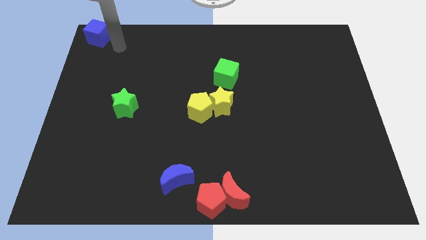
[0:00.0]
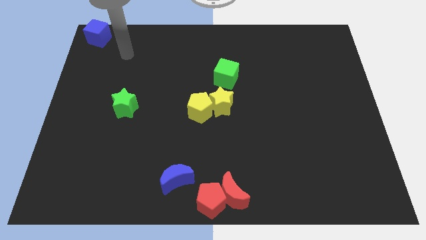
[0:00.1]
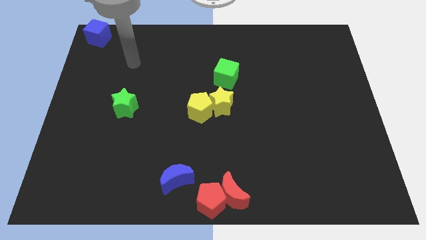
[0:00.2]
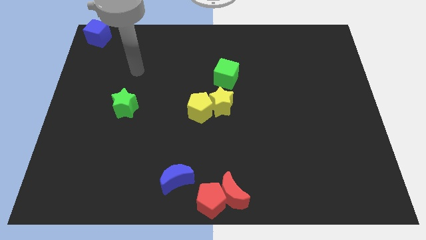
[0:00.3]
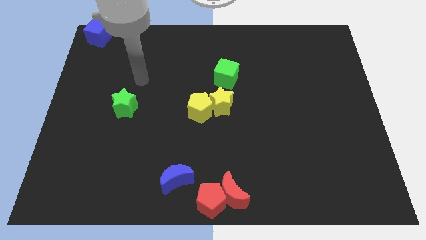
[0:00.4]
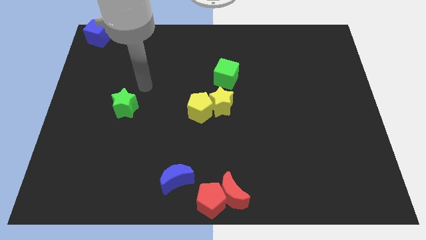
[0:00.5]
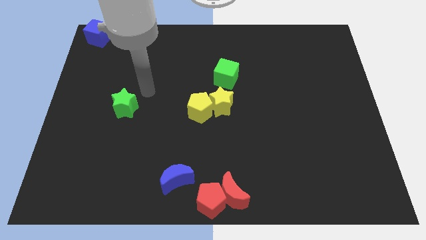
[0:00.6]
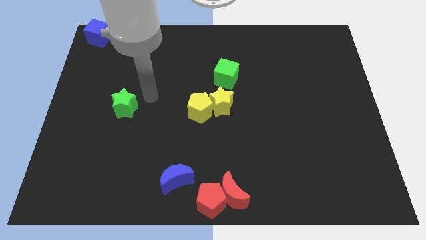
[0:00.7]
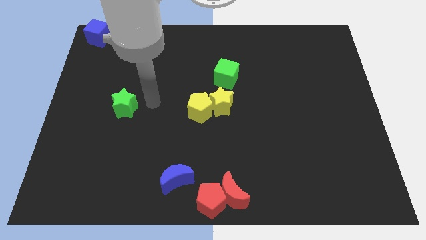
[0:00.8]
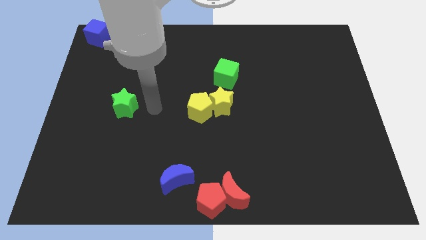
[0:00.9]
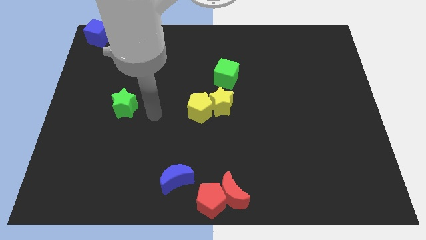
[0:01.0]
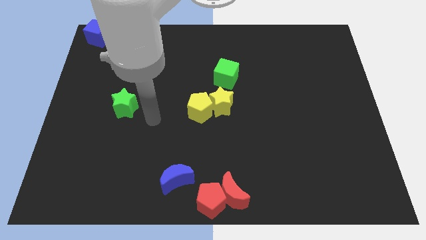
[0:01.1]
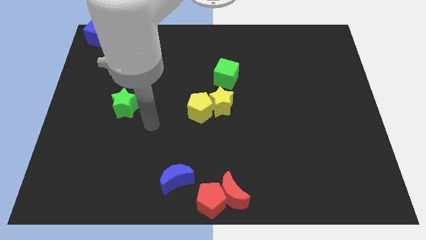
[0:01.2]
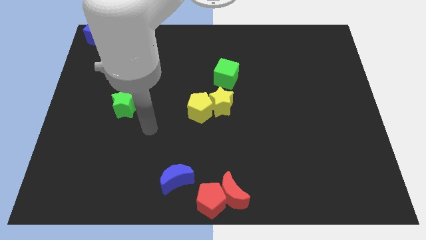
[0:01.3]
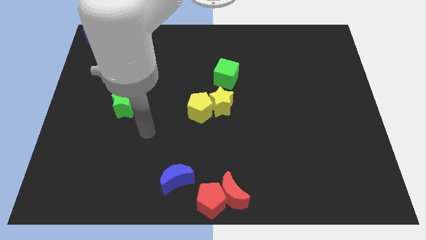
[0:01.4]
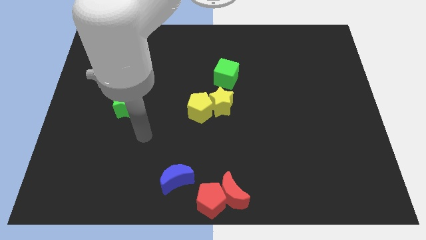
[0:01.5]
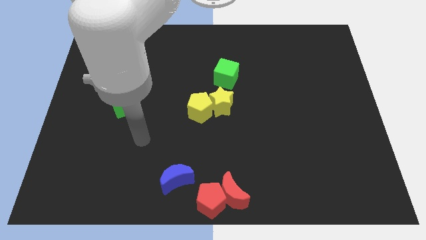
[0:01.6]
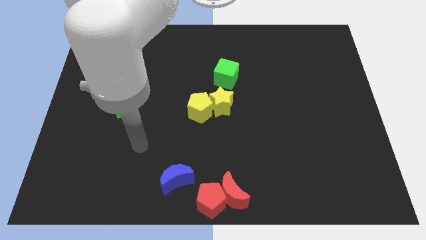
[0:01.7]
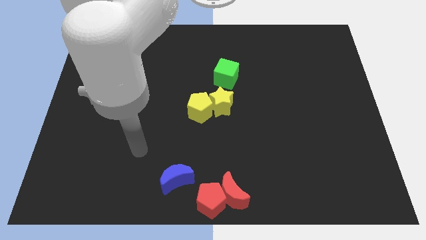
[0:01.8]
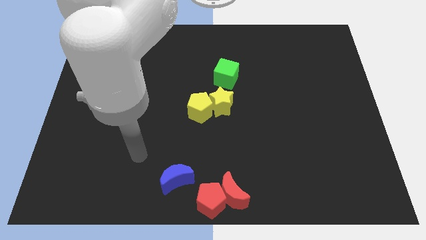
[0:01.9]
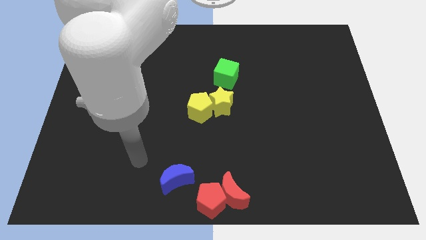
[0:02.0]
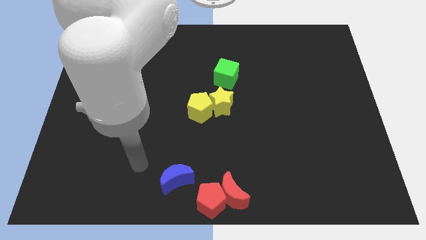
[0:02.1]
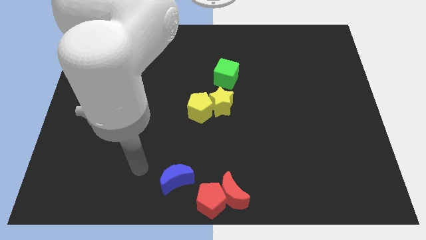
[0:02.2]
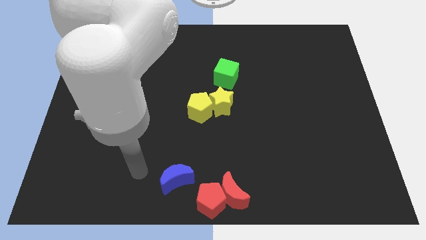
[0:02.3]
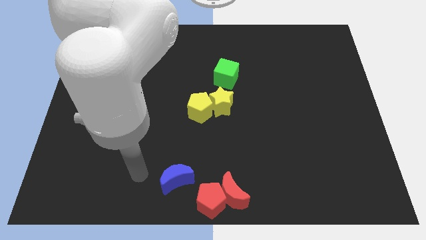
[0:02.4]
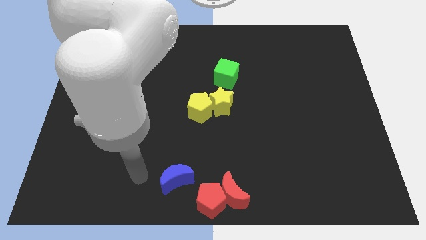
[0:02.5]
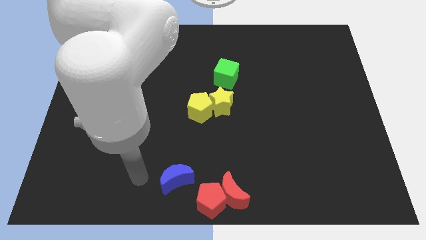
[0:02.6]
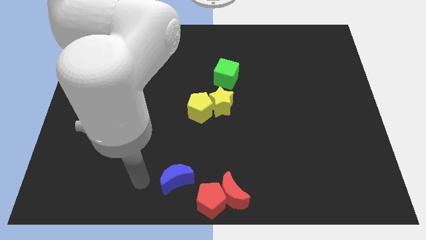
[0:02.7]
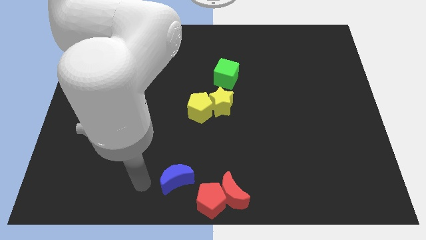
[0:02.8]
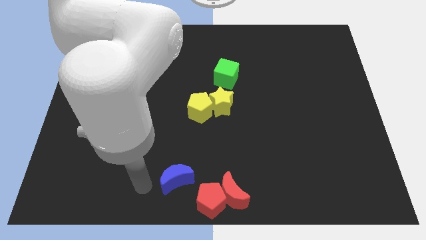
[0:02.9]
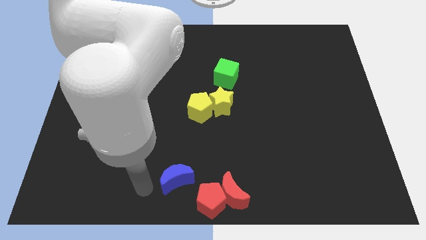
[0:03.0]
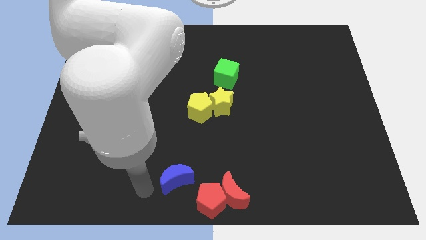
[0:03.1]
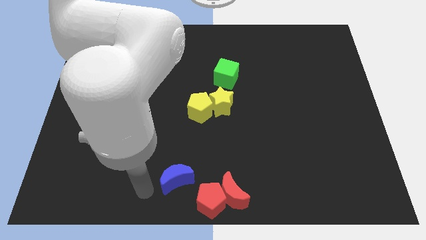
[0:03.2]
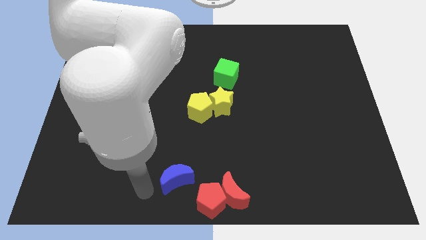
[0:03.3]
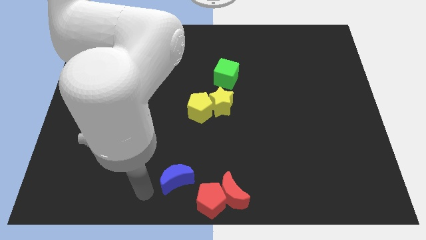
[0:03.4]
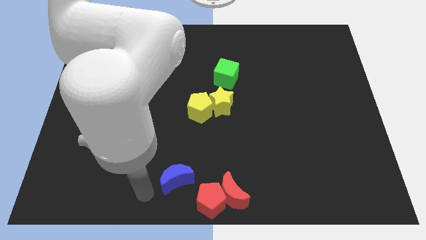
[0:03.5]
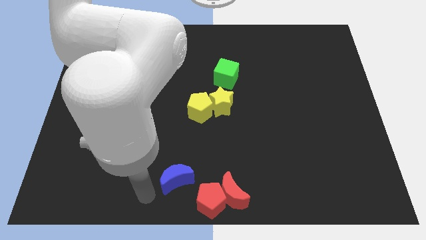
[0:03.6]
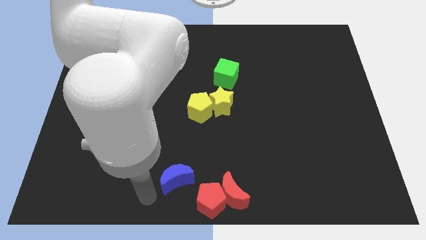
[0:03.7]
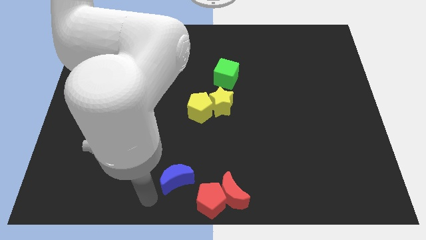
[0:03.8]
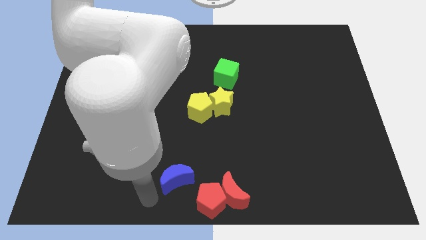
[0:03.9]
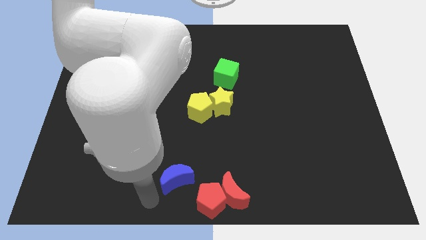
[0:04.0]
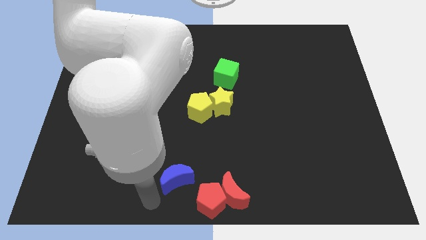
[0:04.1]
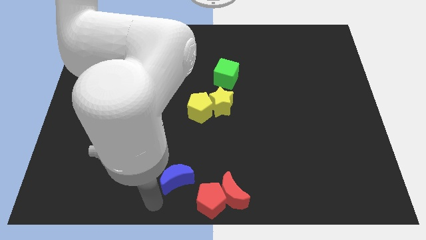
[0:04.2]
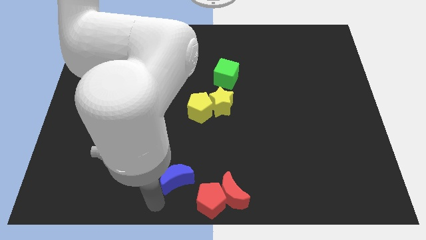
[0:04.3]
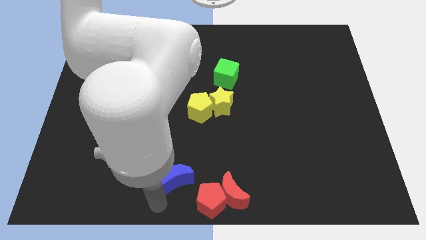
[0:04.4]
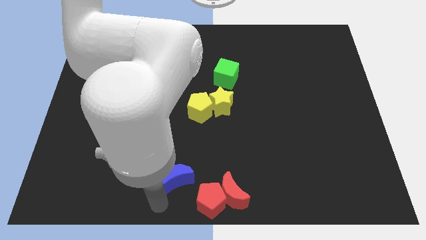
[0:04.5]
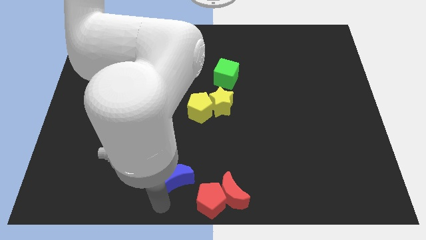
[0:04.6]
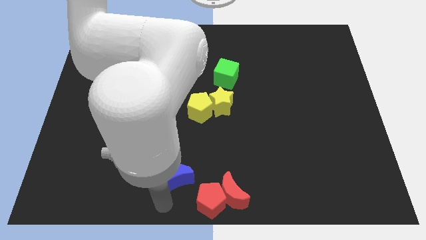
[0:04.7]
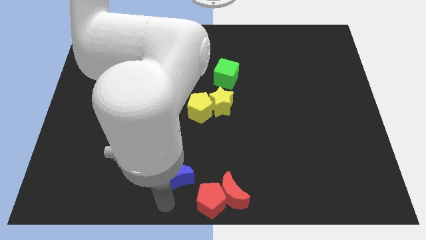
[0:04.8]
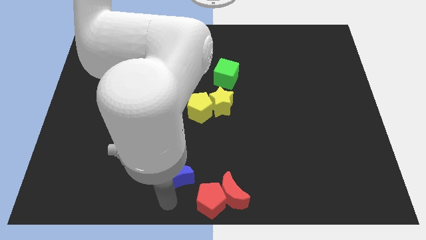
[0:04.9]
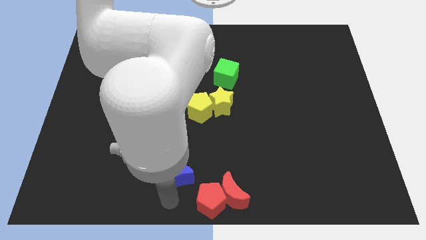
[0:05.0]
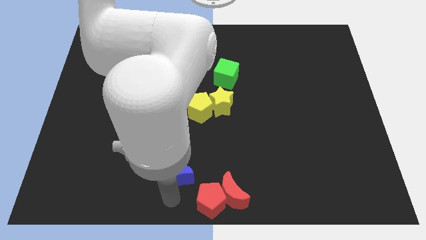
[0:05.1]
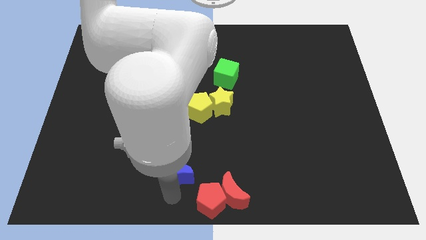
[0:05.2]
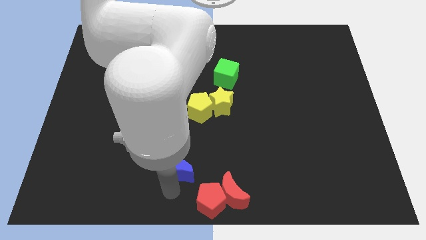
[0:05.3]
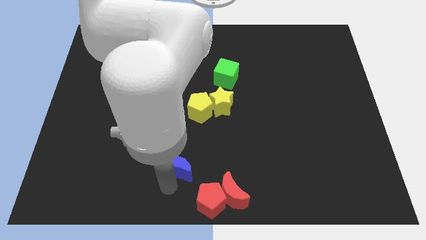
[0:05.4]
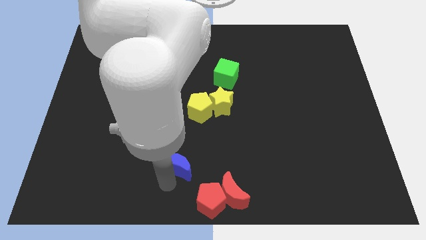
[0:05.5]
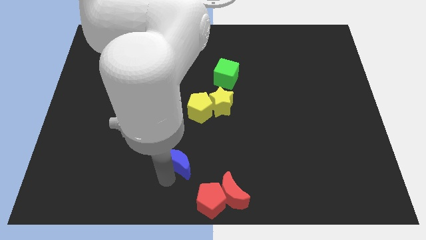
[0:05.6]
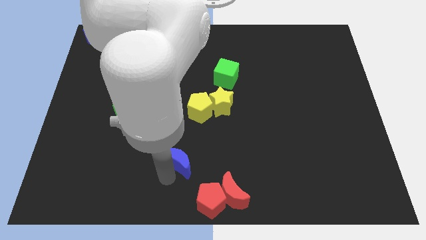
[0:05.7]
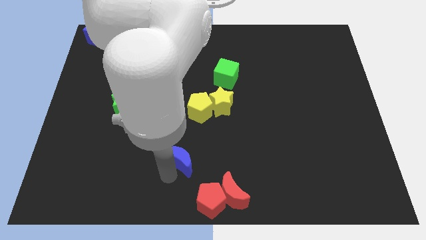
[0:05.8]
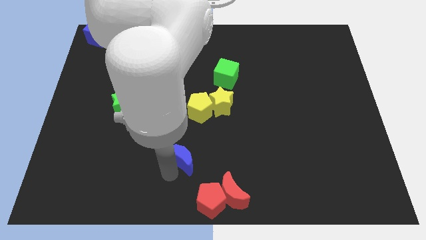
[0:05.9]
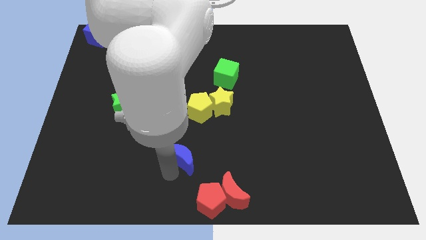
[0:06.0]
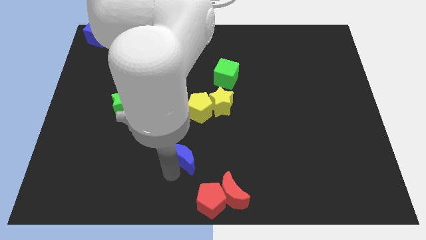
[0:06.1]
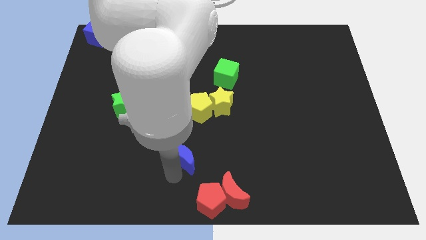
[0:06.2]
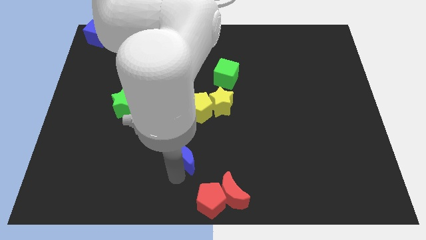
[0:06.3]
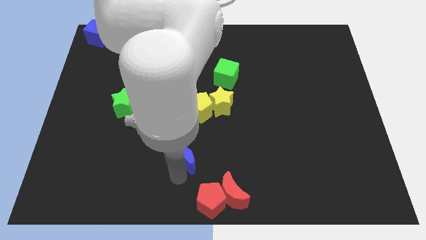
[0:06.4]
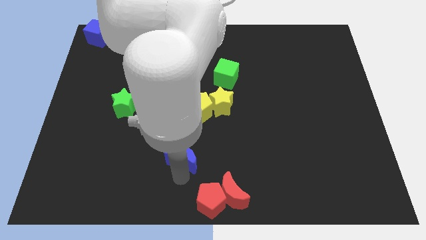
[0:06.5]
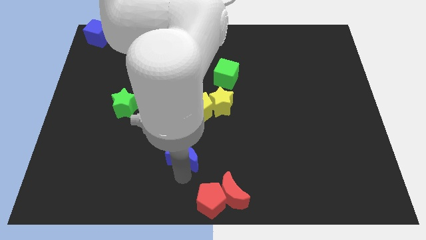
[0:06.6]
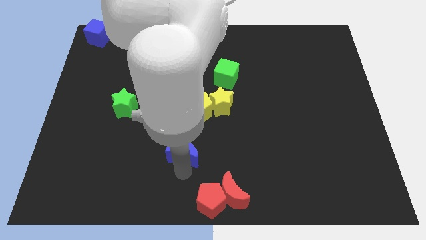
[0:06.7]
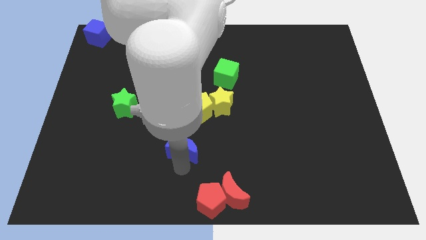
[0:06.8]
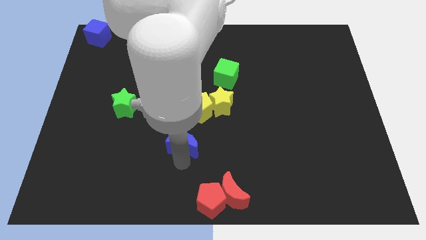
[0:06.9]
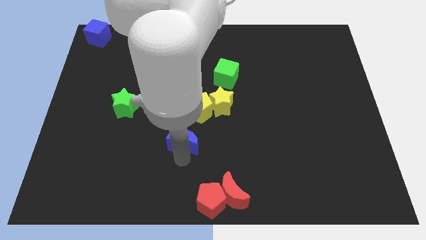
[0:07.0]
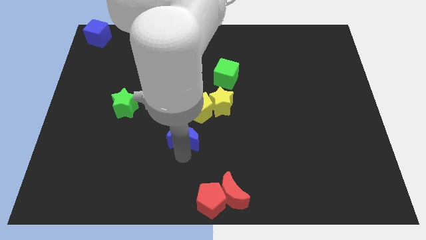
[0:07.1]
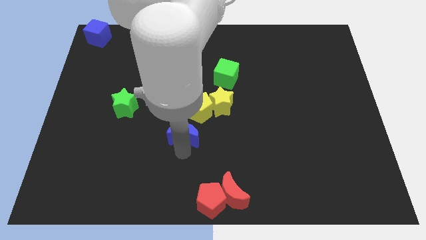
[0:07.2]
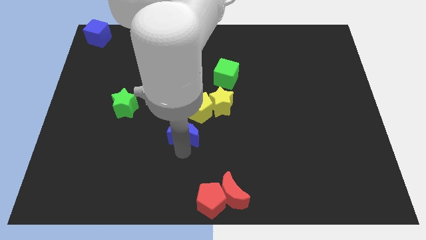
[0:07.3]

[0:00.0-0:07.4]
place the blue crescent below the yellow pentagon

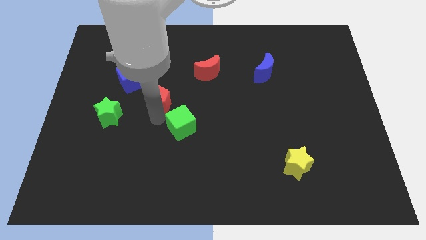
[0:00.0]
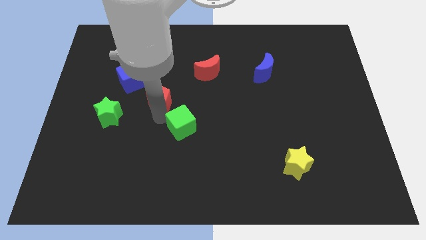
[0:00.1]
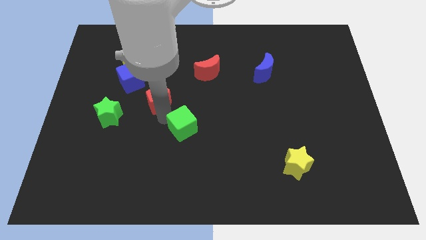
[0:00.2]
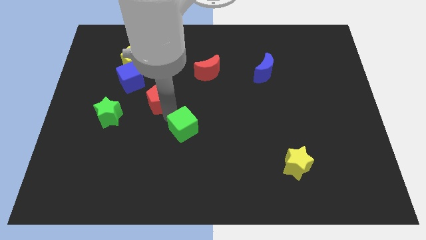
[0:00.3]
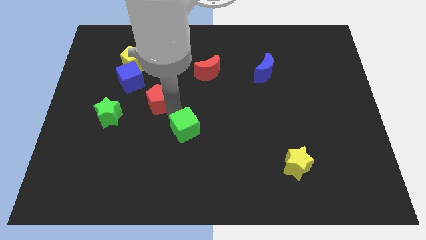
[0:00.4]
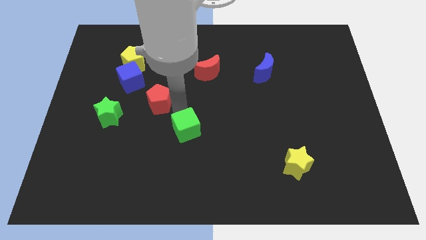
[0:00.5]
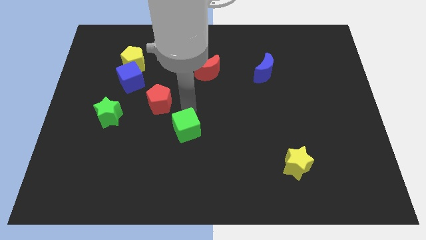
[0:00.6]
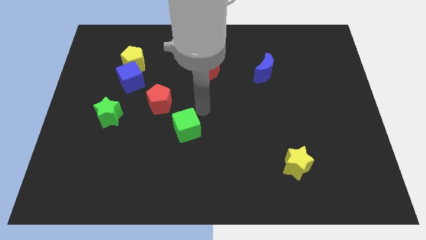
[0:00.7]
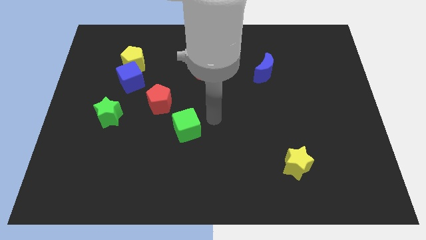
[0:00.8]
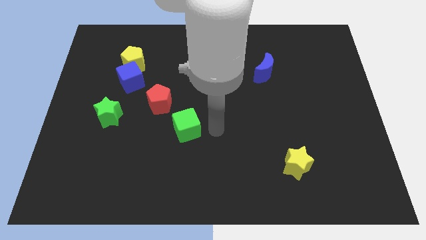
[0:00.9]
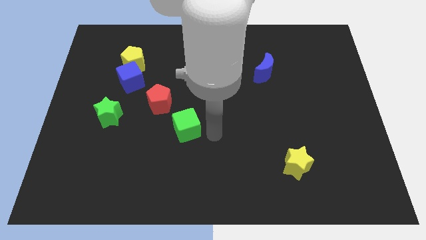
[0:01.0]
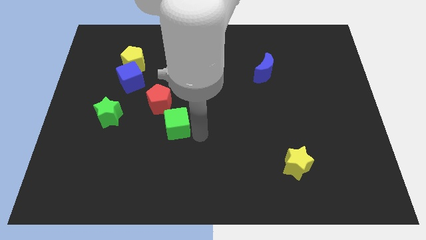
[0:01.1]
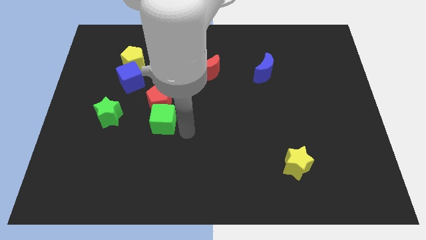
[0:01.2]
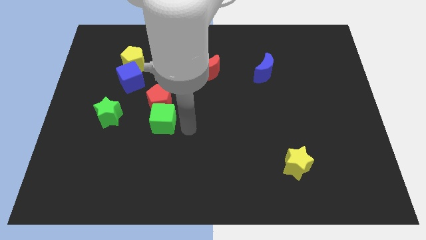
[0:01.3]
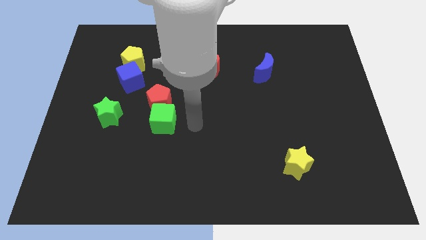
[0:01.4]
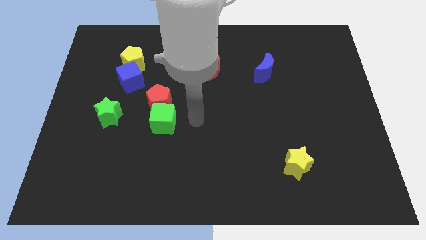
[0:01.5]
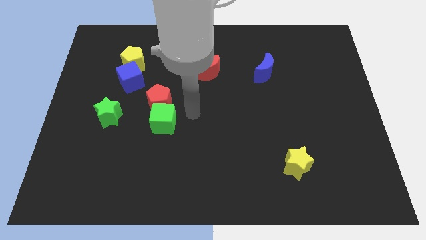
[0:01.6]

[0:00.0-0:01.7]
move green cube towards red pentagon
